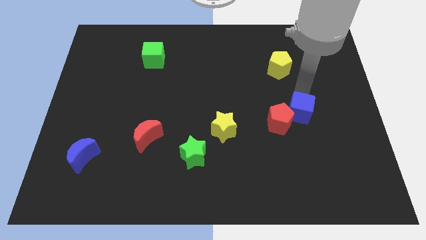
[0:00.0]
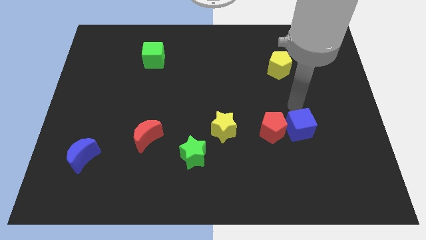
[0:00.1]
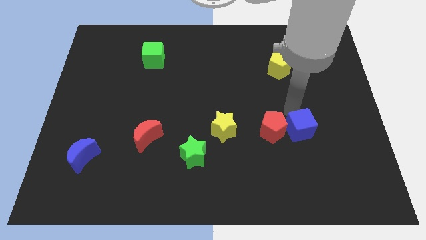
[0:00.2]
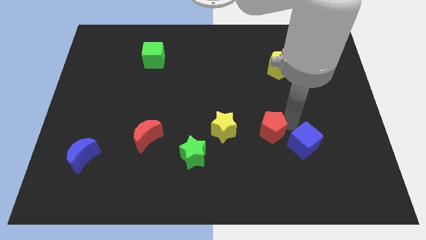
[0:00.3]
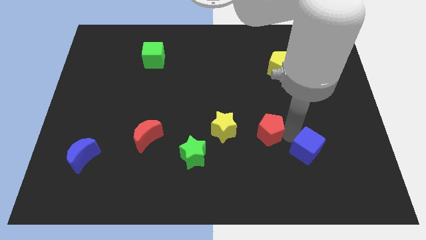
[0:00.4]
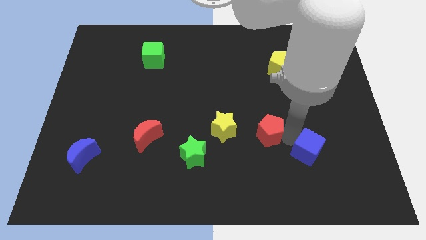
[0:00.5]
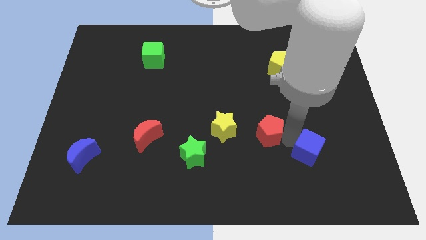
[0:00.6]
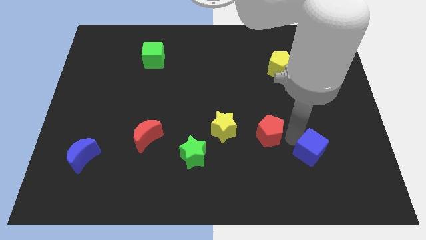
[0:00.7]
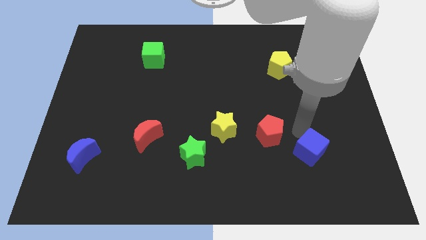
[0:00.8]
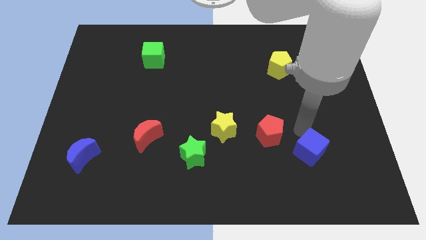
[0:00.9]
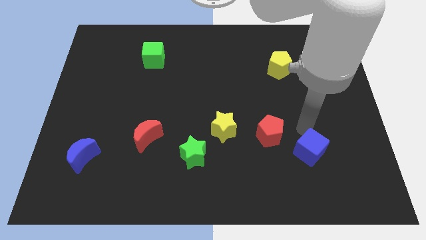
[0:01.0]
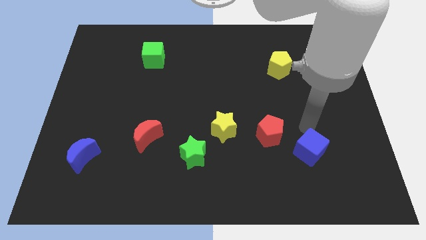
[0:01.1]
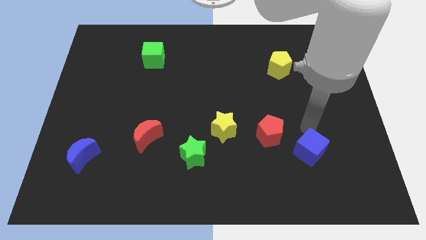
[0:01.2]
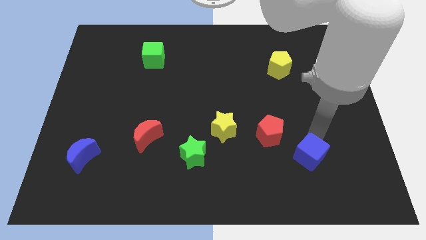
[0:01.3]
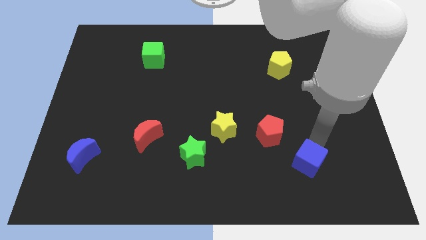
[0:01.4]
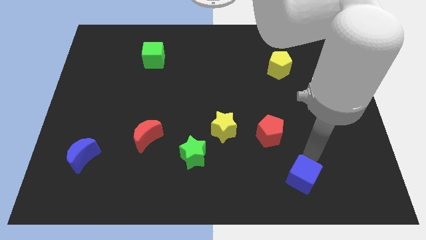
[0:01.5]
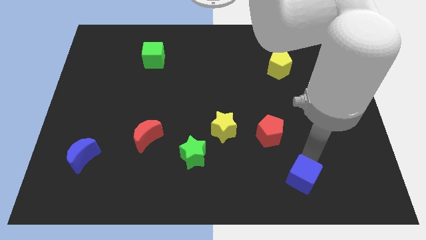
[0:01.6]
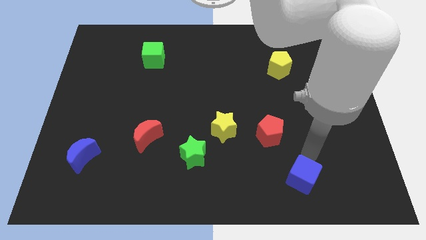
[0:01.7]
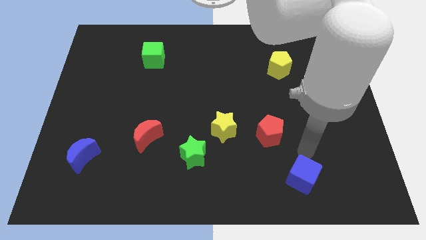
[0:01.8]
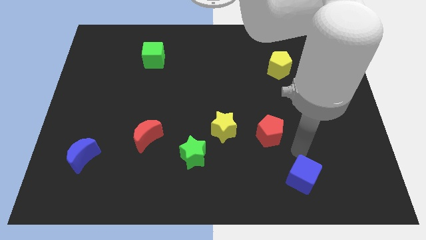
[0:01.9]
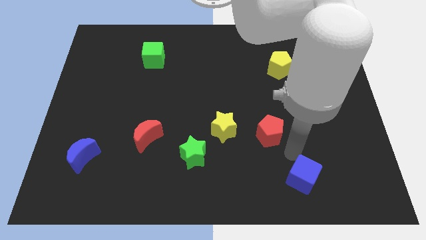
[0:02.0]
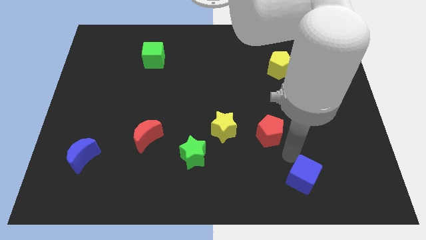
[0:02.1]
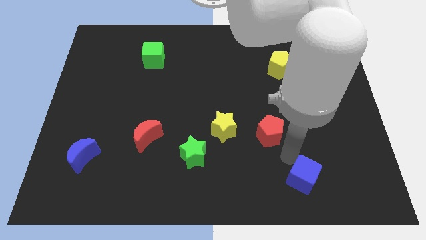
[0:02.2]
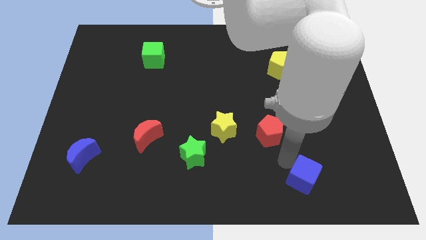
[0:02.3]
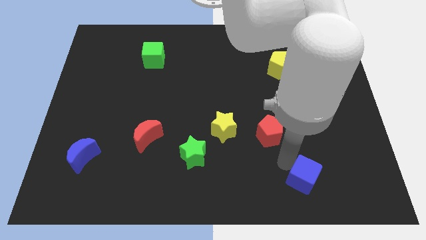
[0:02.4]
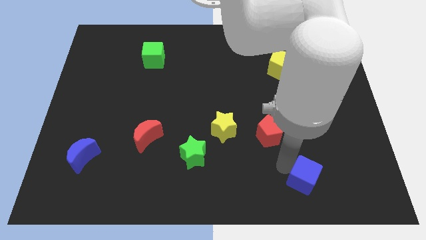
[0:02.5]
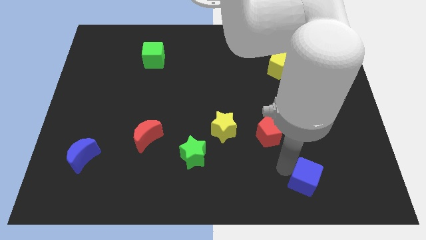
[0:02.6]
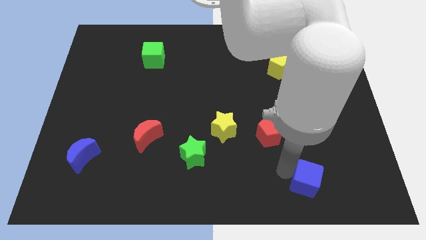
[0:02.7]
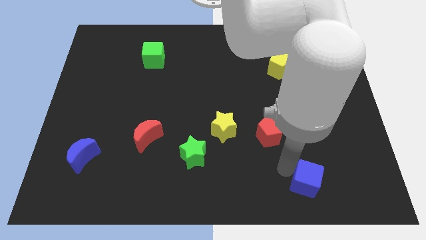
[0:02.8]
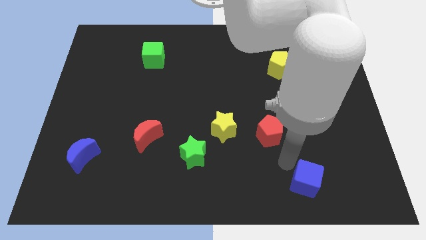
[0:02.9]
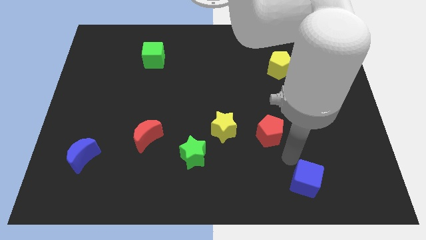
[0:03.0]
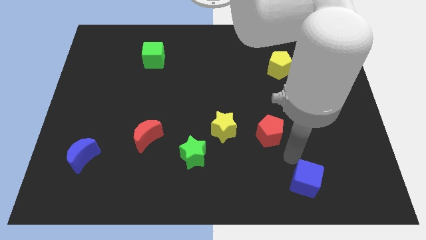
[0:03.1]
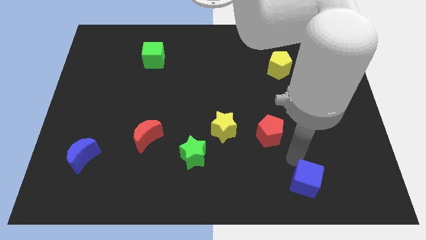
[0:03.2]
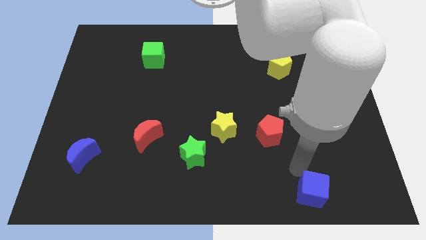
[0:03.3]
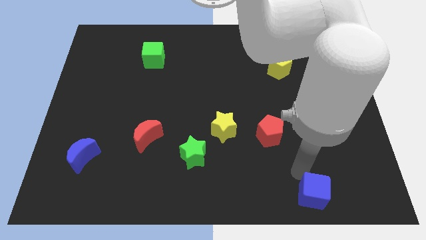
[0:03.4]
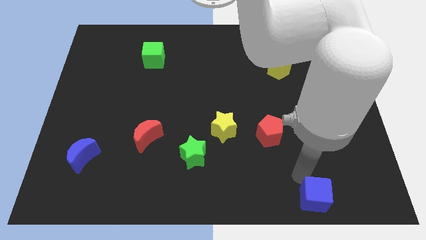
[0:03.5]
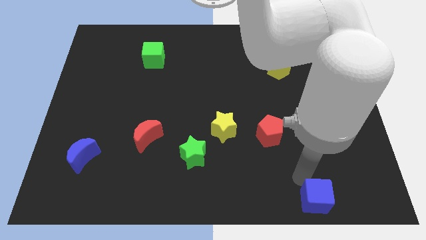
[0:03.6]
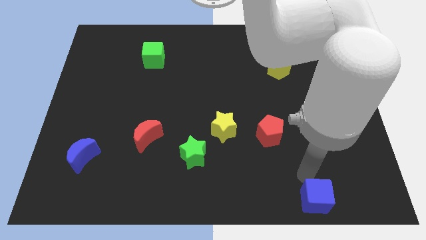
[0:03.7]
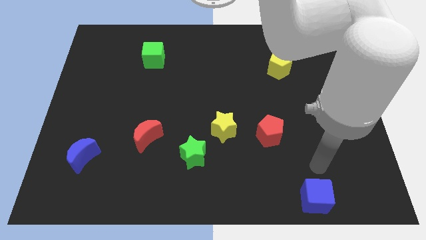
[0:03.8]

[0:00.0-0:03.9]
push the blue cube slightly to the bottom right

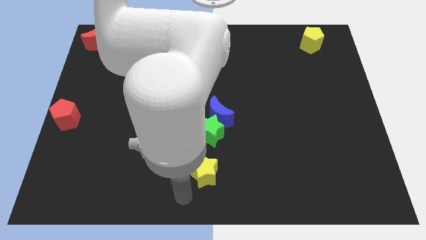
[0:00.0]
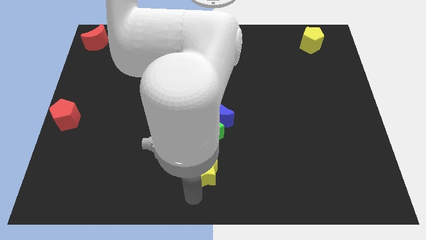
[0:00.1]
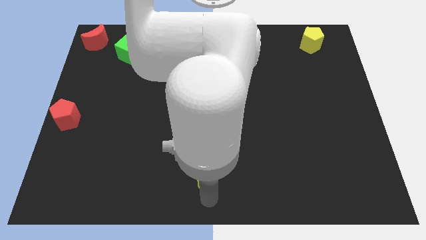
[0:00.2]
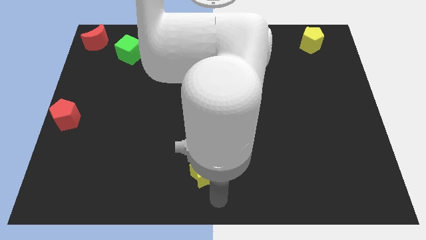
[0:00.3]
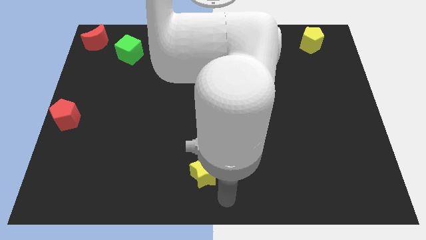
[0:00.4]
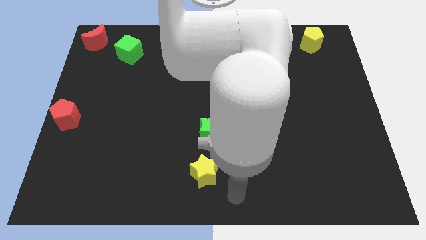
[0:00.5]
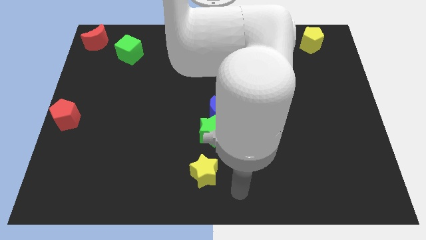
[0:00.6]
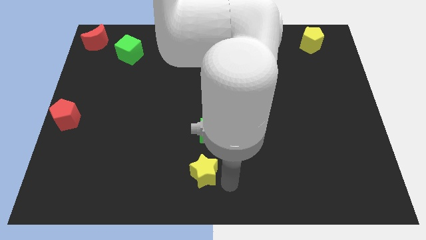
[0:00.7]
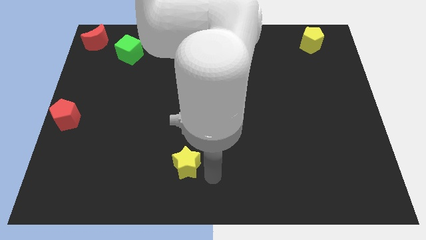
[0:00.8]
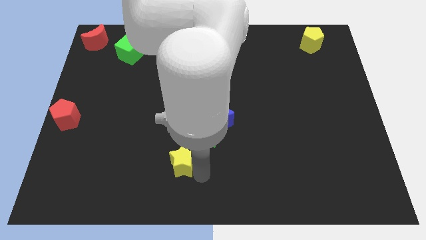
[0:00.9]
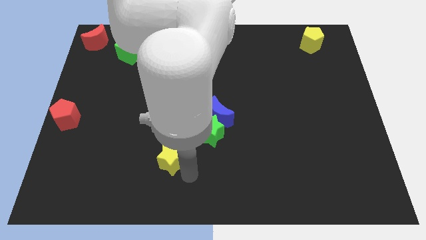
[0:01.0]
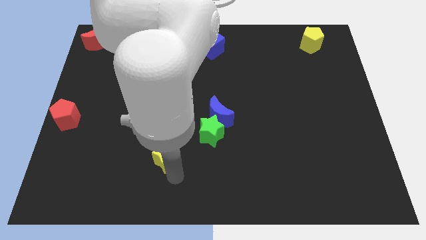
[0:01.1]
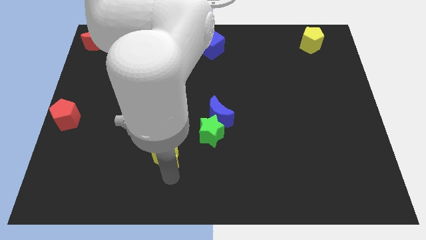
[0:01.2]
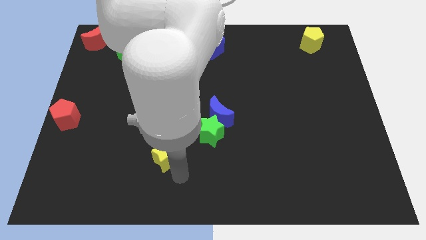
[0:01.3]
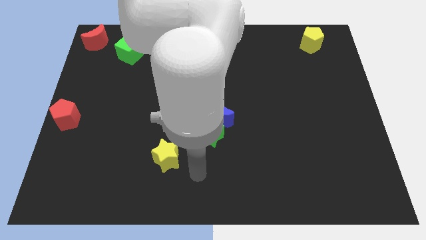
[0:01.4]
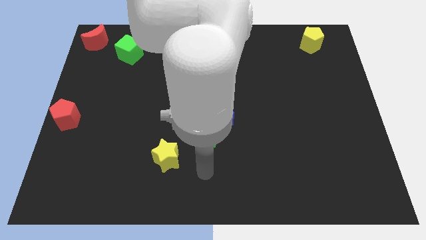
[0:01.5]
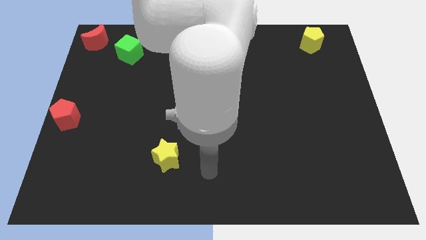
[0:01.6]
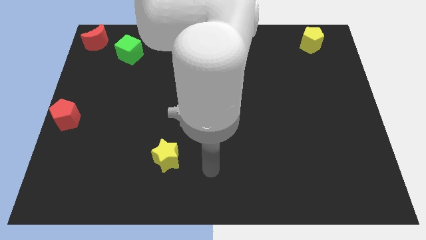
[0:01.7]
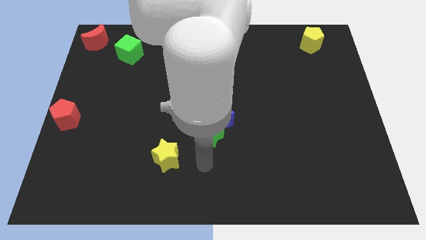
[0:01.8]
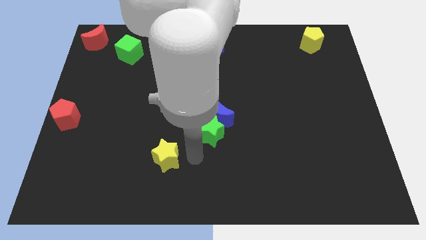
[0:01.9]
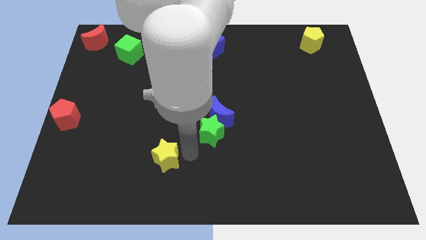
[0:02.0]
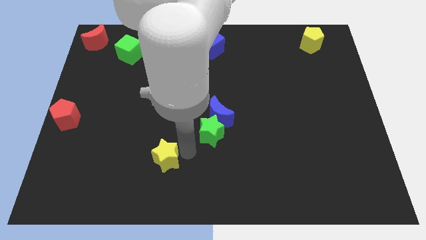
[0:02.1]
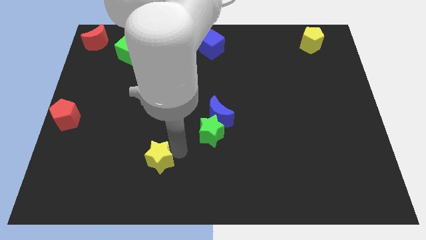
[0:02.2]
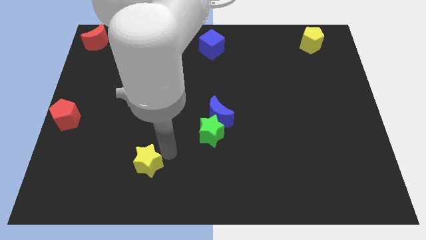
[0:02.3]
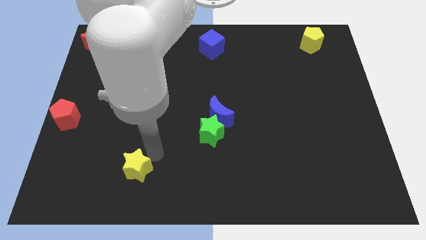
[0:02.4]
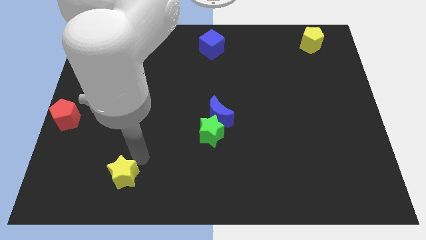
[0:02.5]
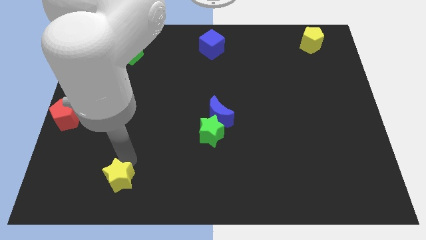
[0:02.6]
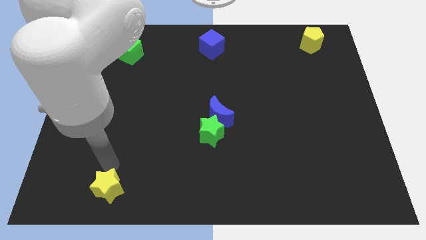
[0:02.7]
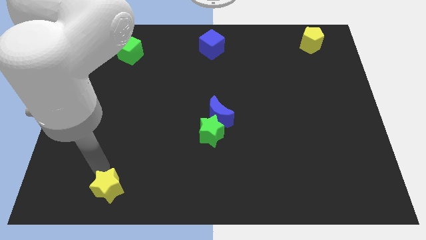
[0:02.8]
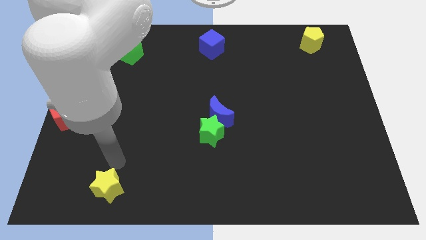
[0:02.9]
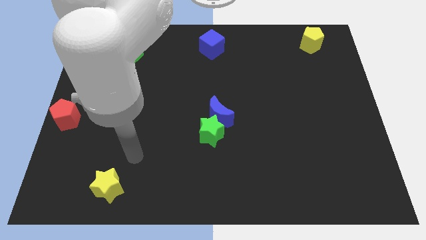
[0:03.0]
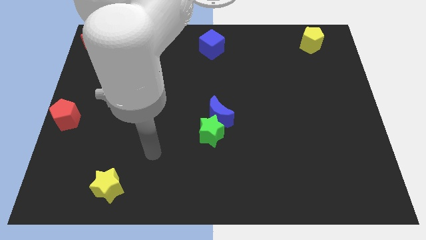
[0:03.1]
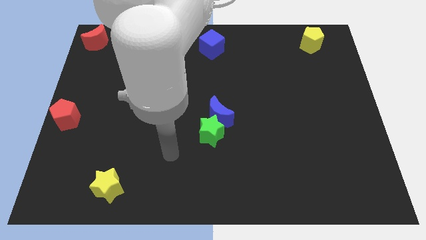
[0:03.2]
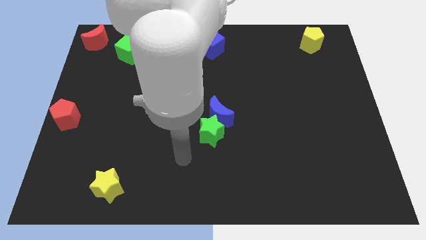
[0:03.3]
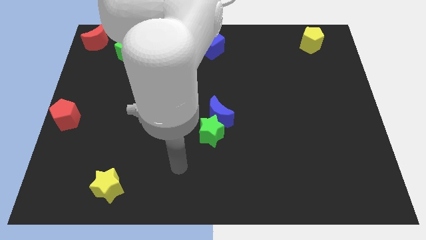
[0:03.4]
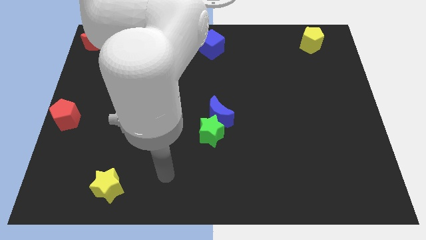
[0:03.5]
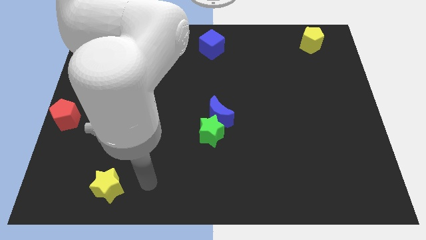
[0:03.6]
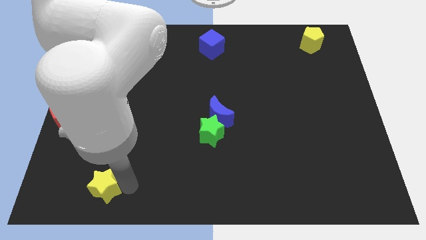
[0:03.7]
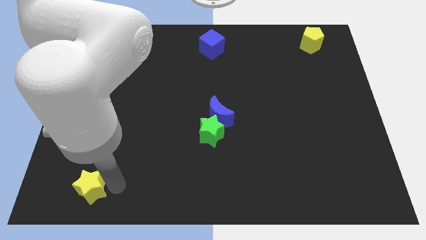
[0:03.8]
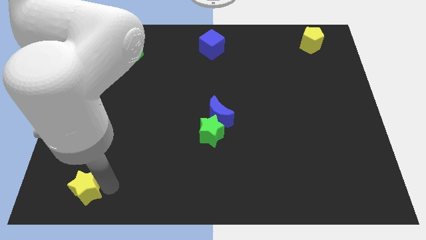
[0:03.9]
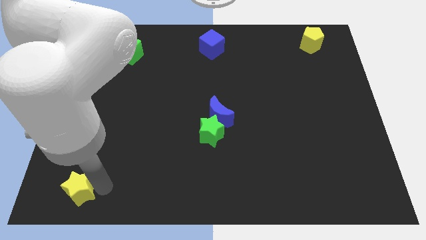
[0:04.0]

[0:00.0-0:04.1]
move the yellow star towards the bottom left side of the board

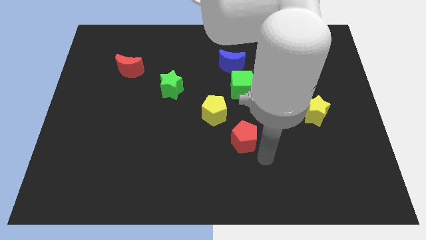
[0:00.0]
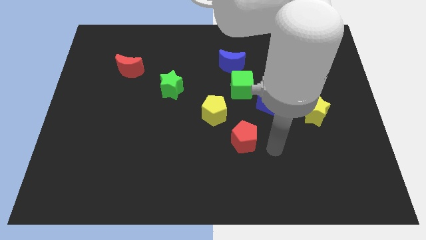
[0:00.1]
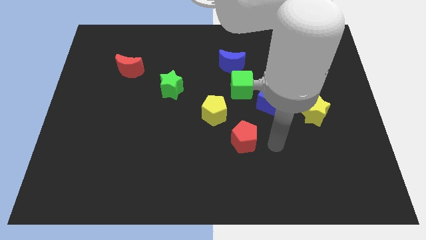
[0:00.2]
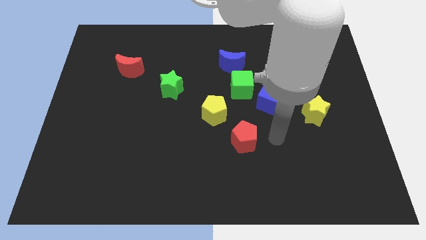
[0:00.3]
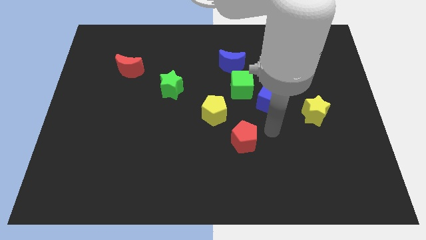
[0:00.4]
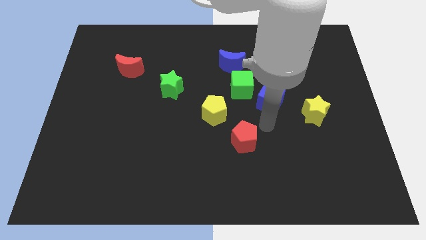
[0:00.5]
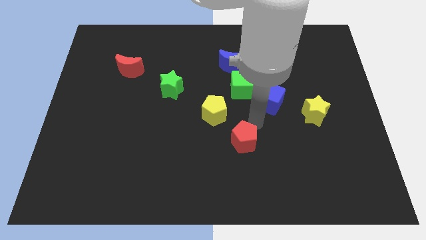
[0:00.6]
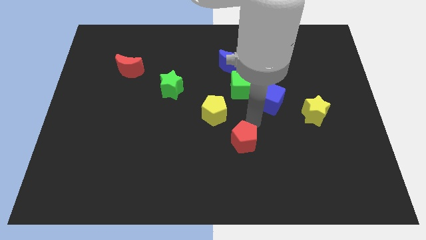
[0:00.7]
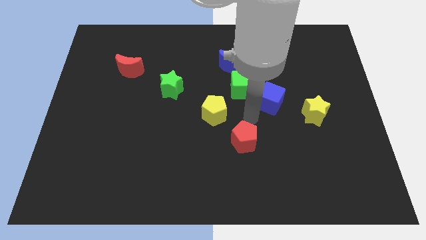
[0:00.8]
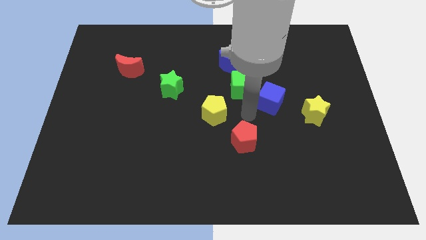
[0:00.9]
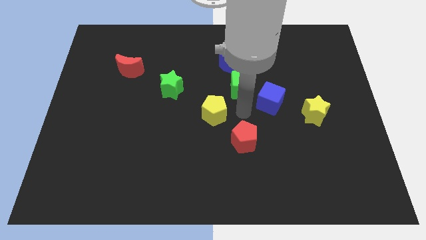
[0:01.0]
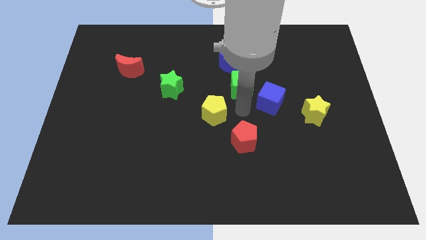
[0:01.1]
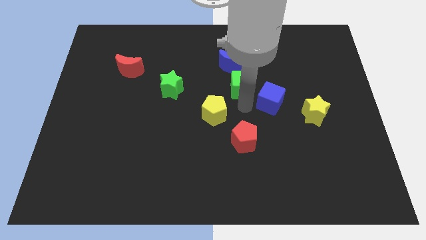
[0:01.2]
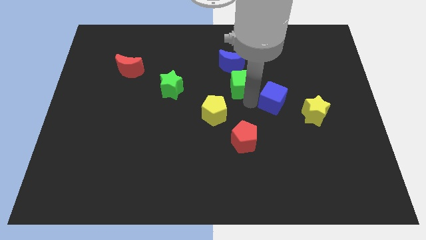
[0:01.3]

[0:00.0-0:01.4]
place the blue cube diagonally in between the green cube and yellow star
